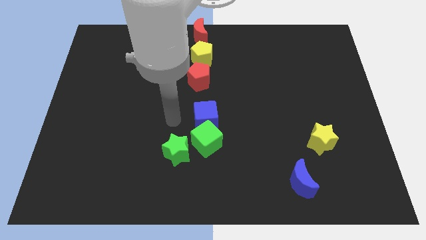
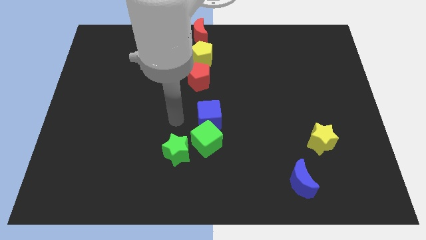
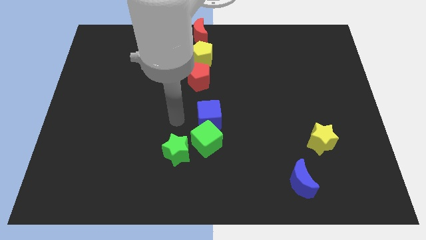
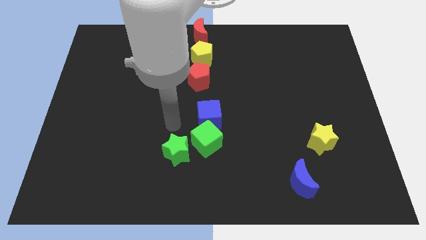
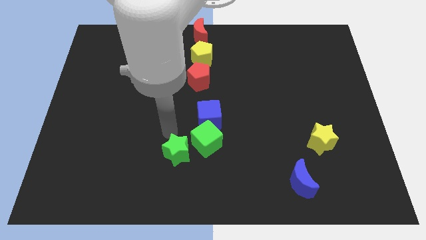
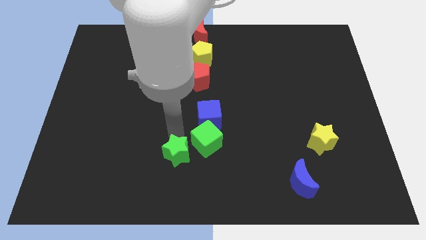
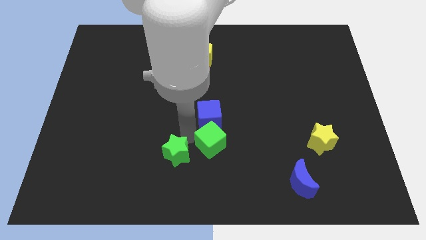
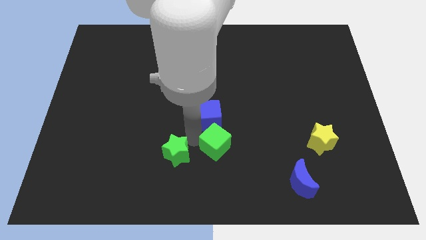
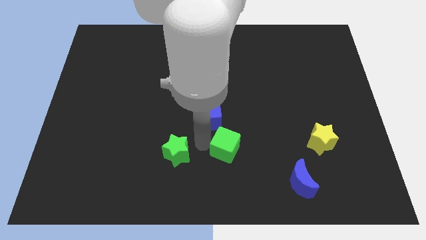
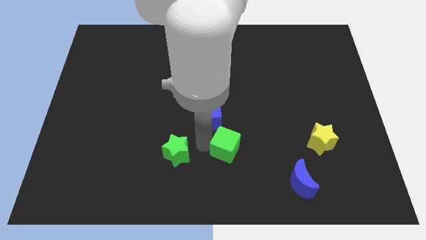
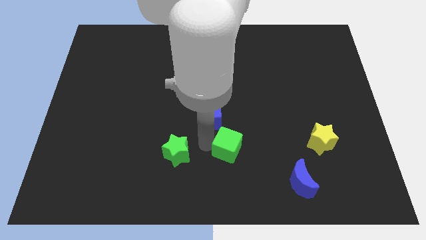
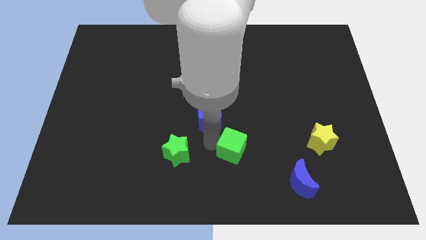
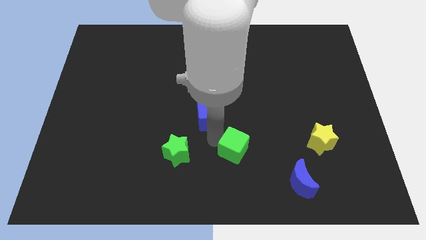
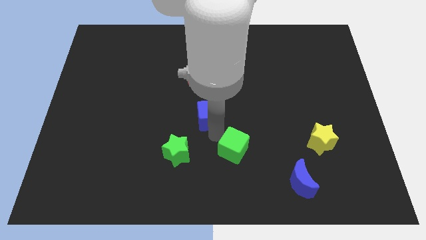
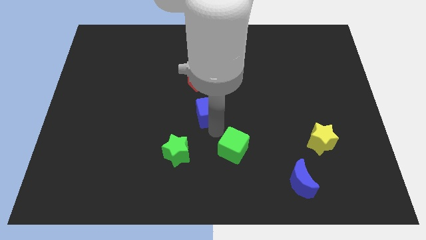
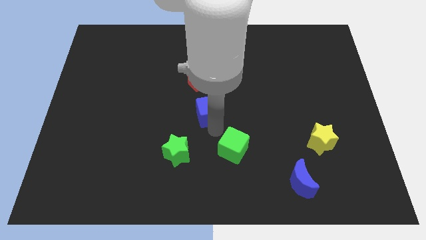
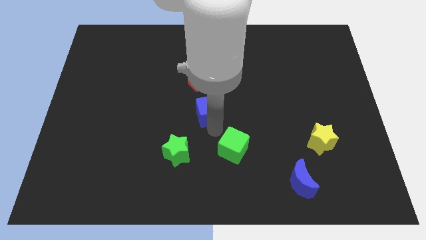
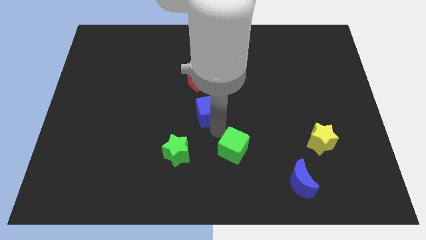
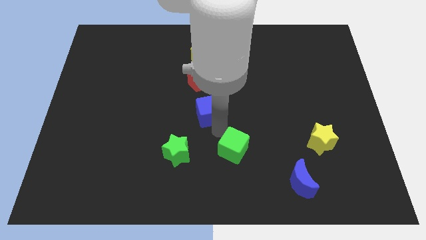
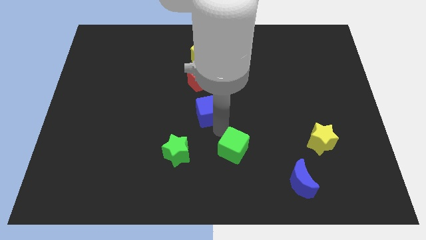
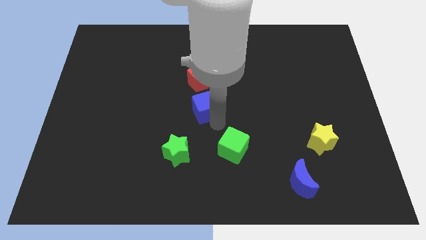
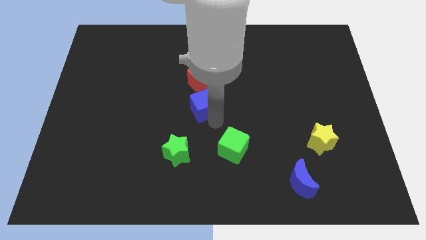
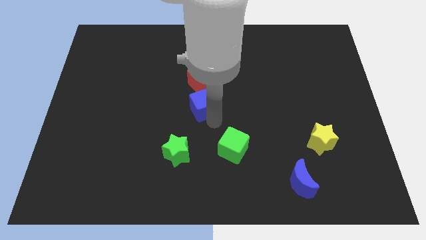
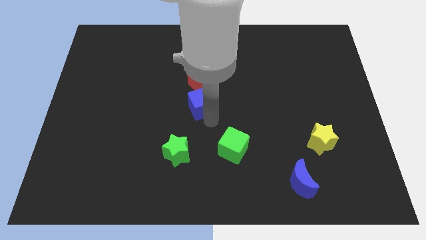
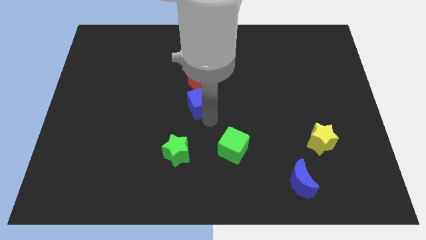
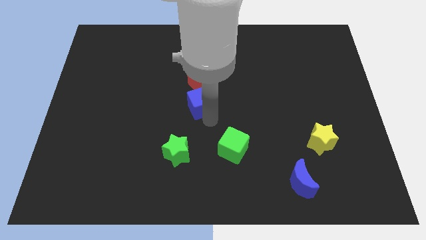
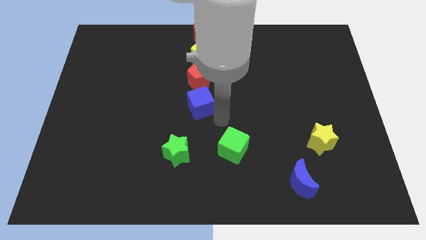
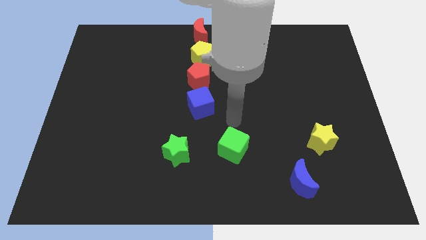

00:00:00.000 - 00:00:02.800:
separate the group of blocks which is at the centre of the board

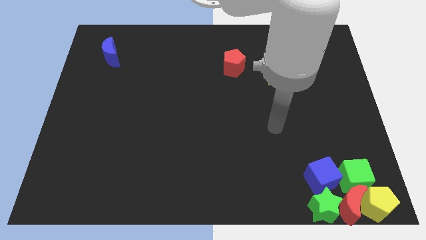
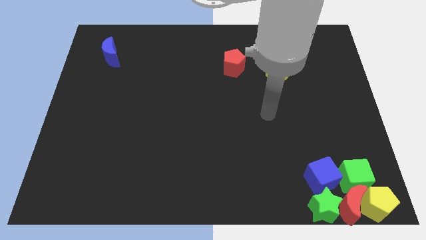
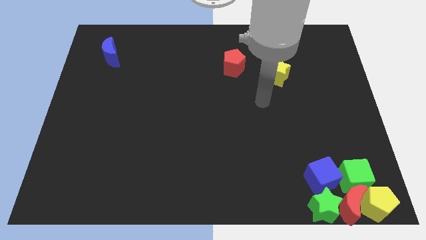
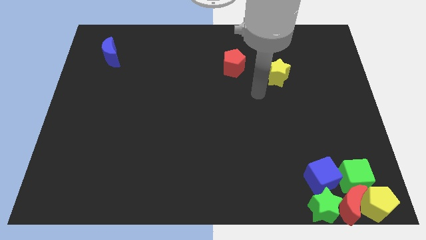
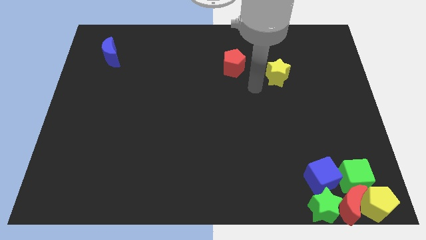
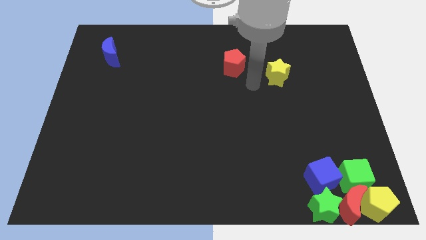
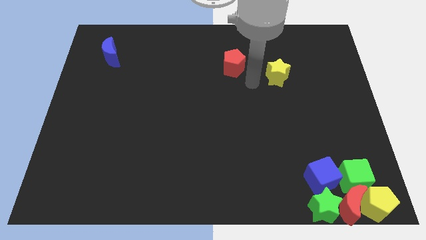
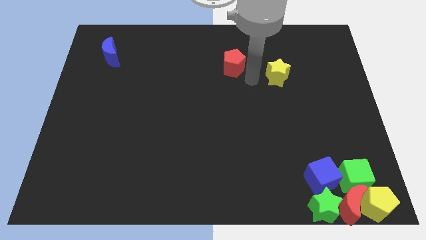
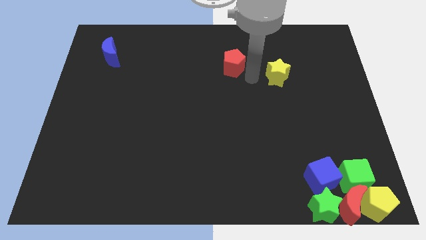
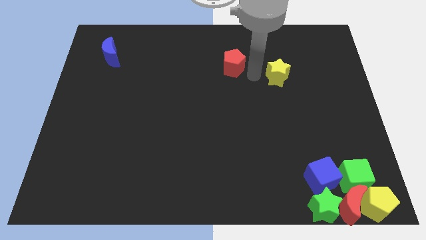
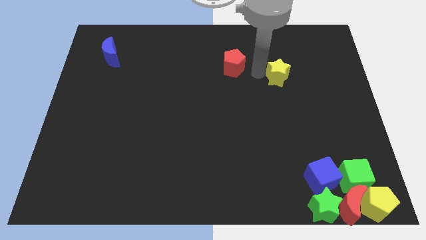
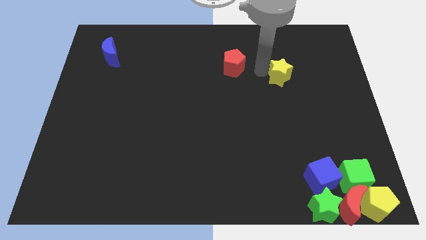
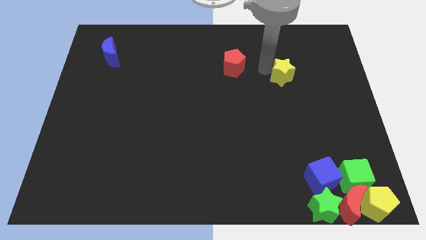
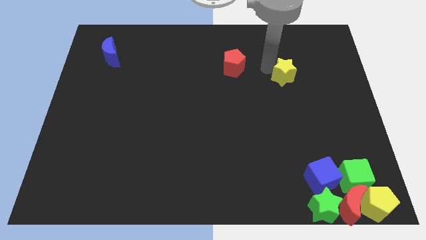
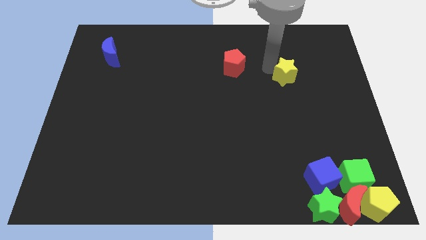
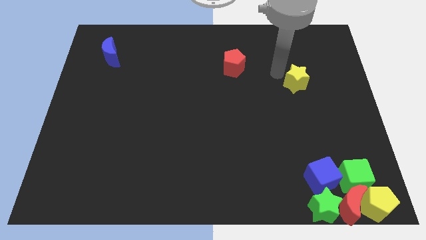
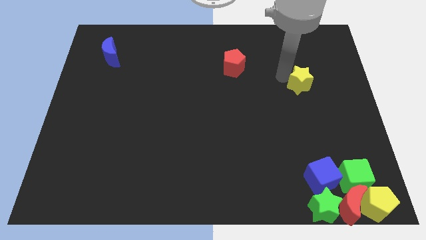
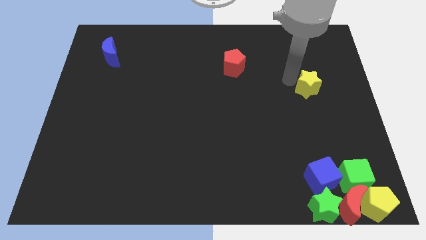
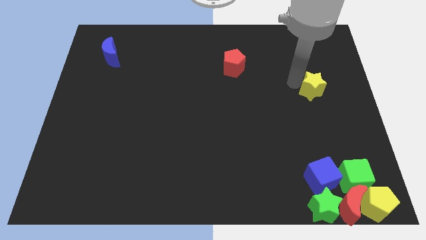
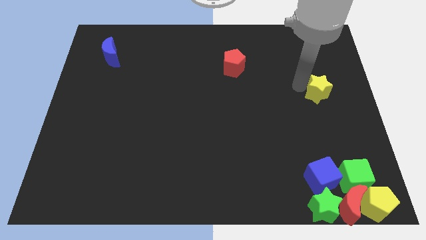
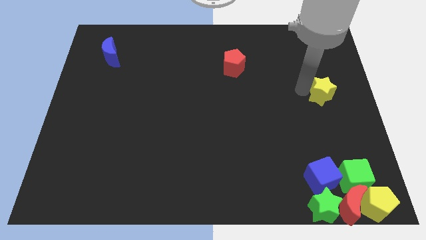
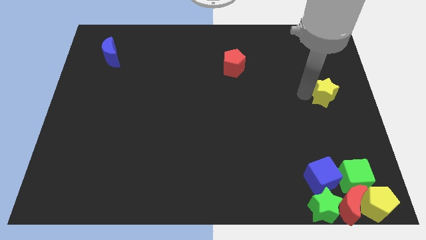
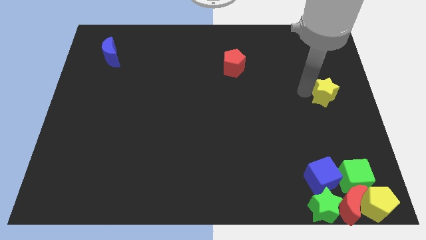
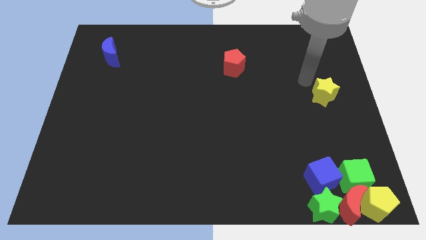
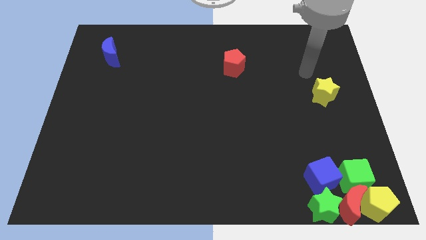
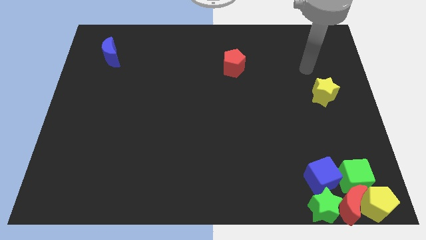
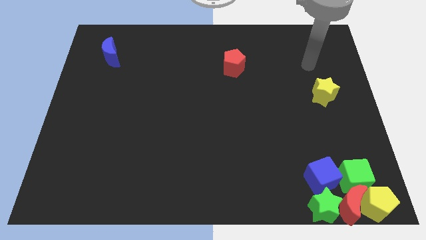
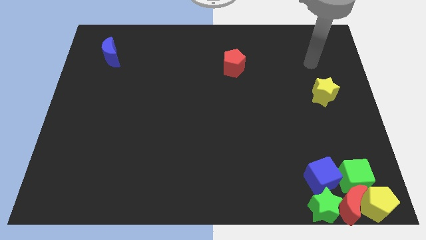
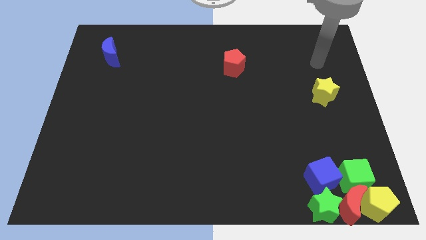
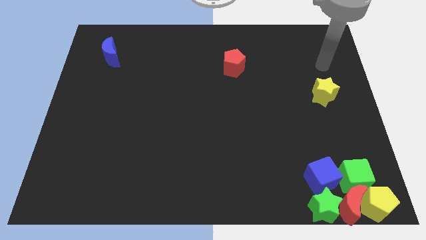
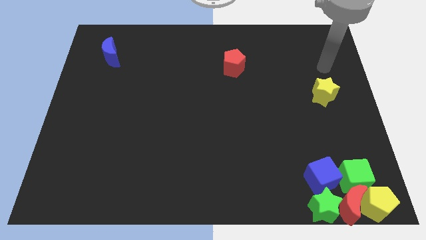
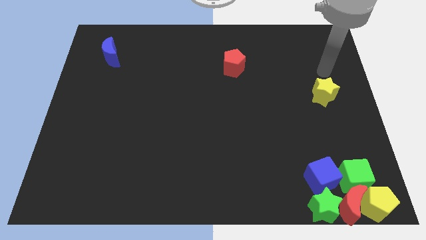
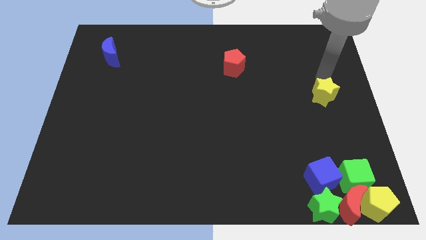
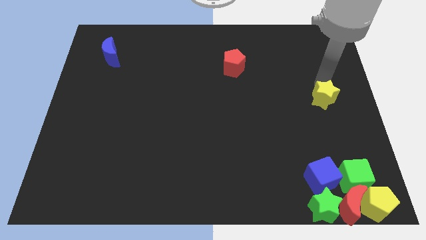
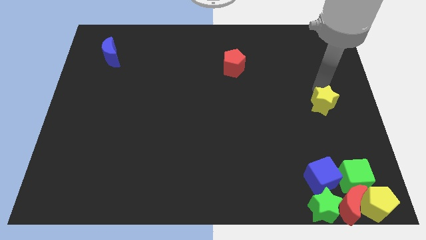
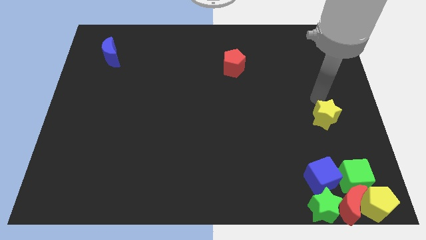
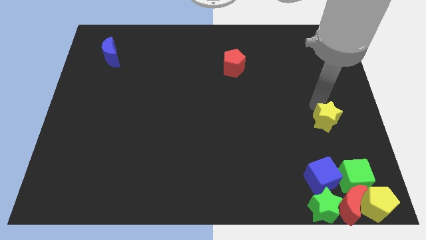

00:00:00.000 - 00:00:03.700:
move the yellow star towards the group of blocks

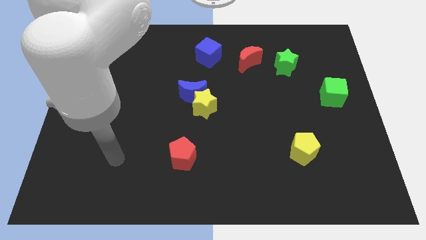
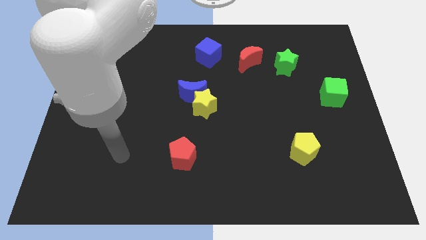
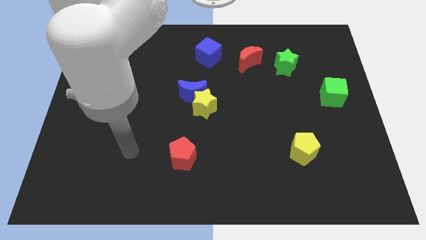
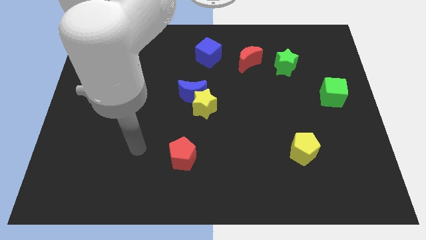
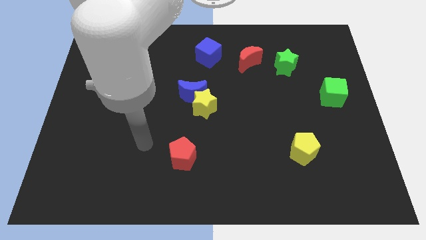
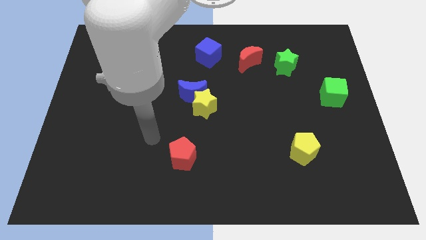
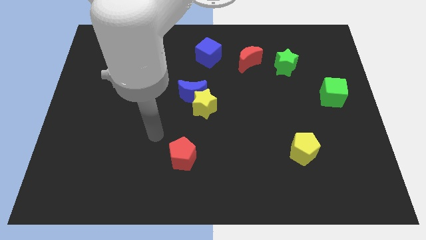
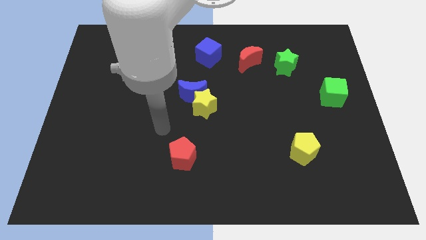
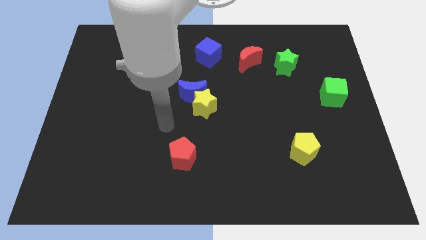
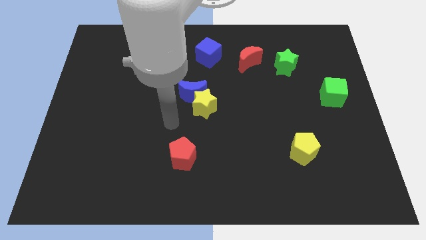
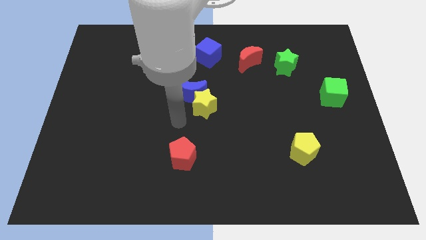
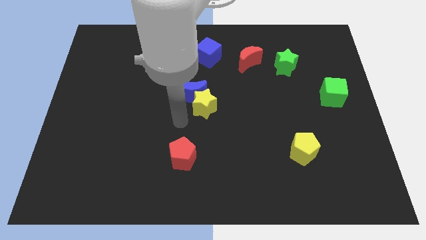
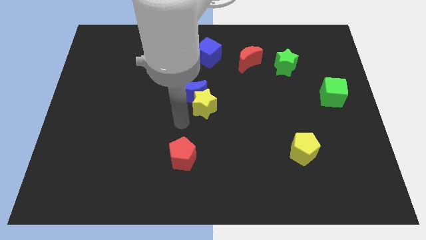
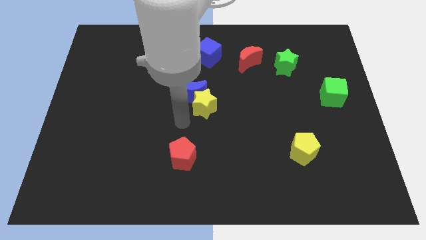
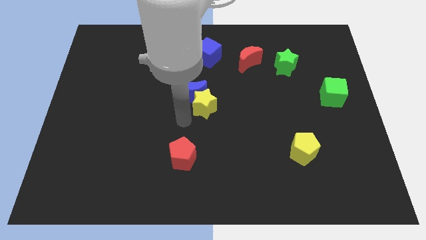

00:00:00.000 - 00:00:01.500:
point your hand above the red pentagon

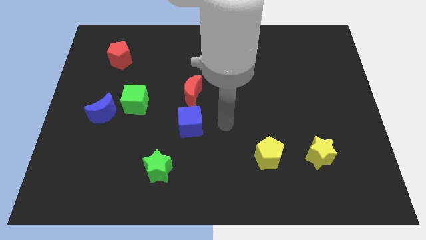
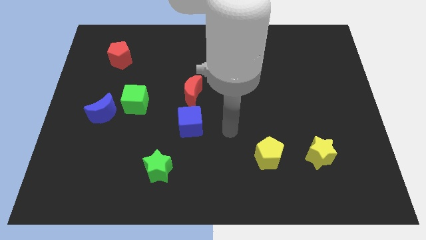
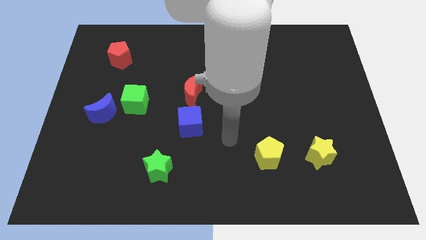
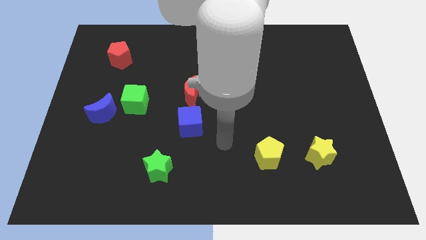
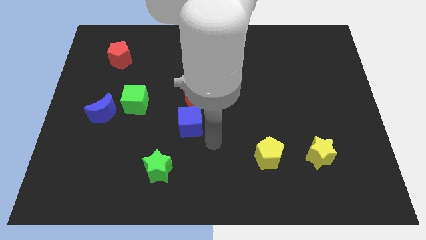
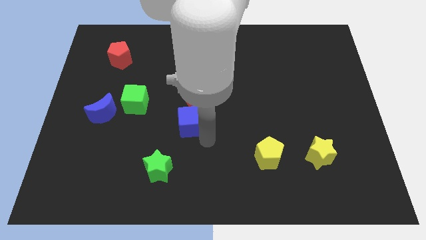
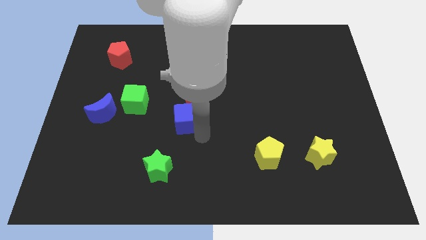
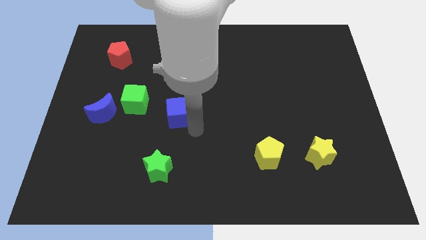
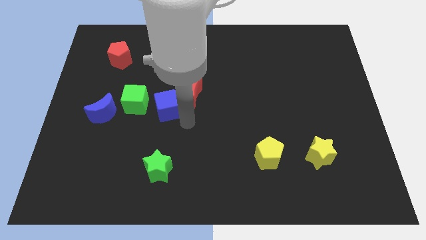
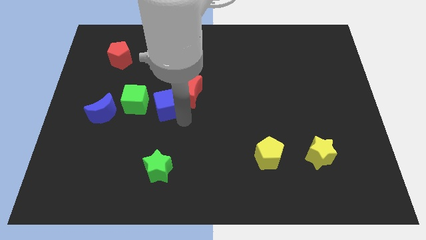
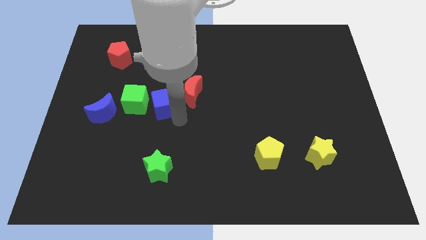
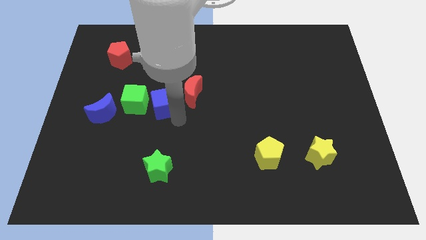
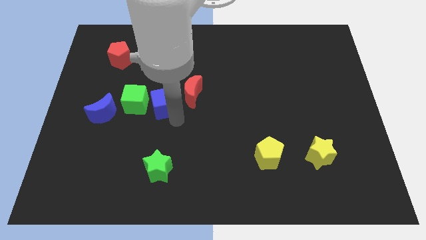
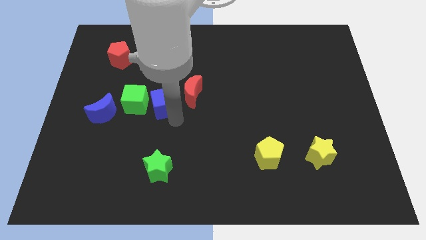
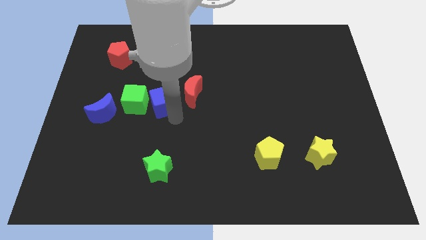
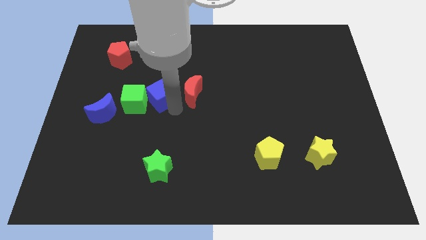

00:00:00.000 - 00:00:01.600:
push the blue moon into the green cube
